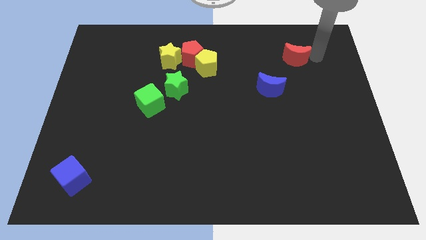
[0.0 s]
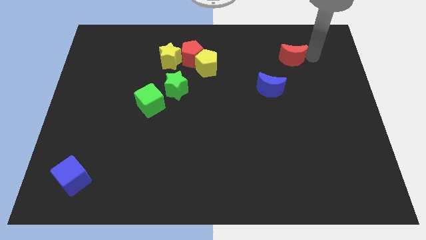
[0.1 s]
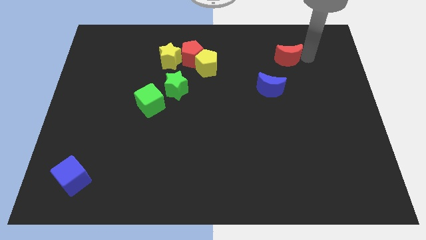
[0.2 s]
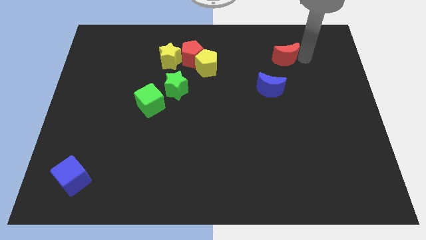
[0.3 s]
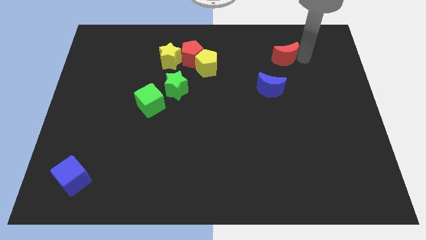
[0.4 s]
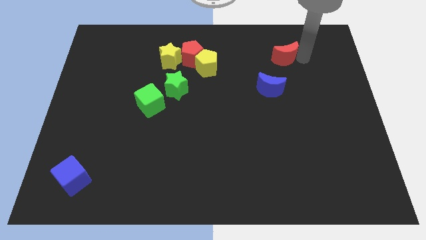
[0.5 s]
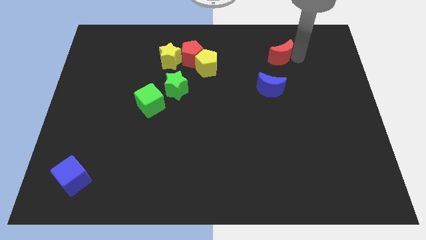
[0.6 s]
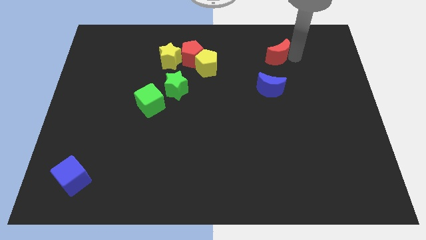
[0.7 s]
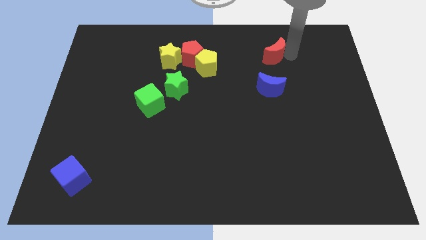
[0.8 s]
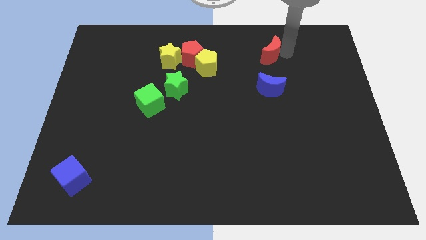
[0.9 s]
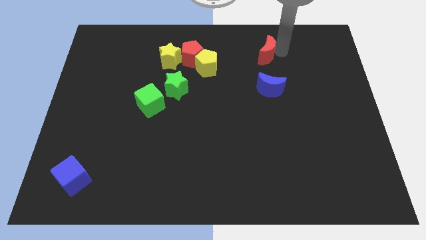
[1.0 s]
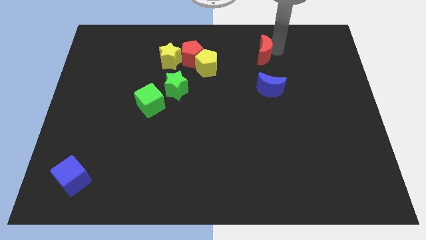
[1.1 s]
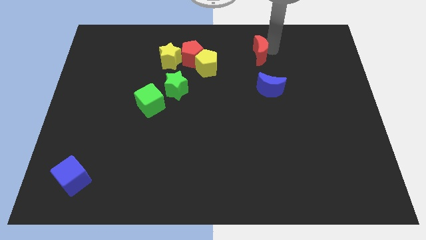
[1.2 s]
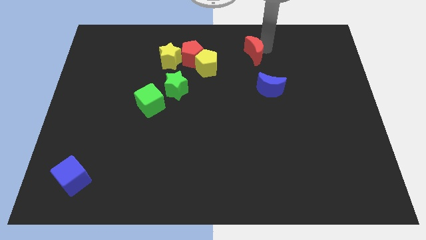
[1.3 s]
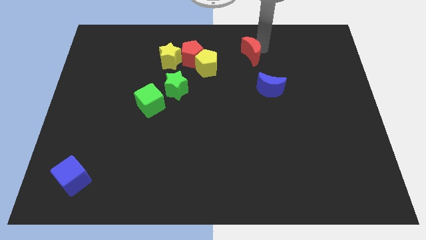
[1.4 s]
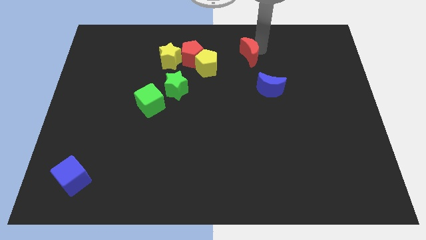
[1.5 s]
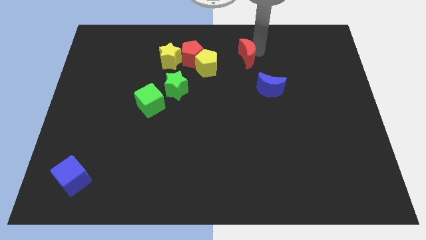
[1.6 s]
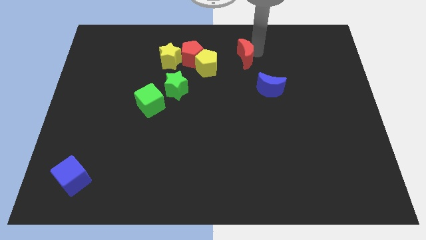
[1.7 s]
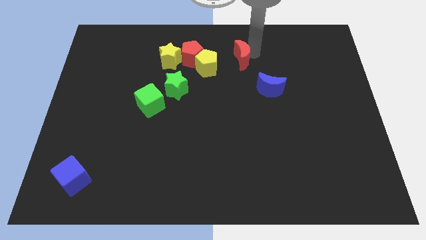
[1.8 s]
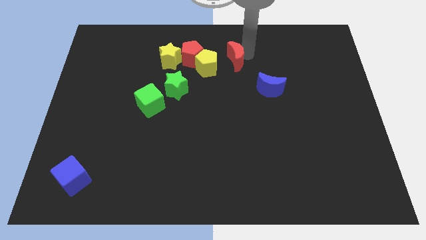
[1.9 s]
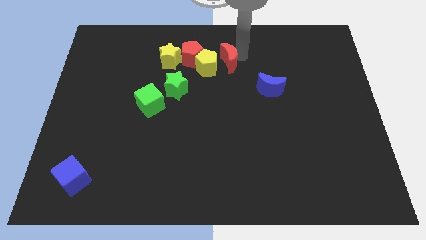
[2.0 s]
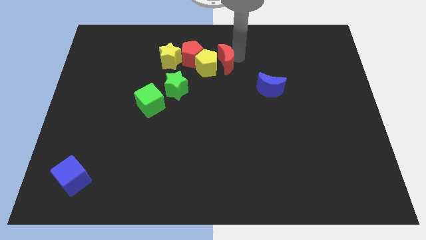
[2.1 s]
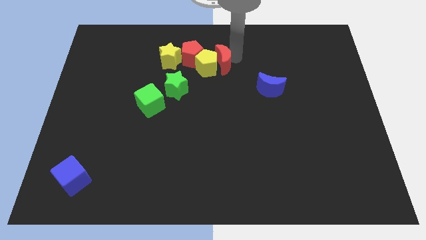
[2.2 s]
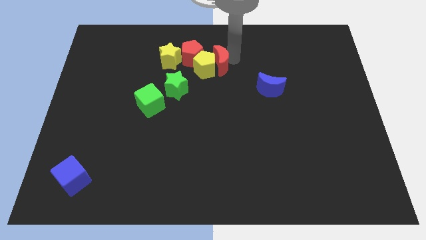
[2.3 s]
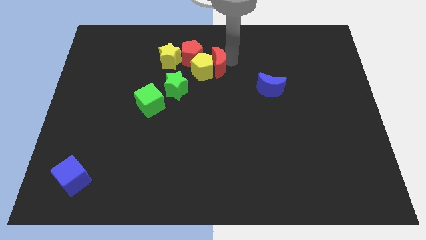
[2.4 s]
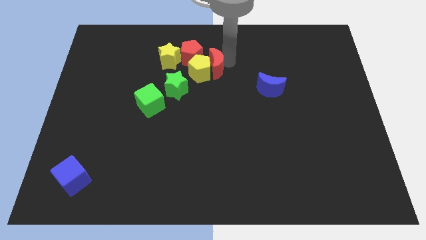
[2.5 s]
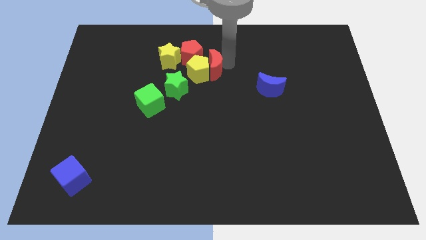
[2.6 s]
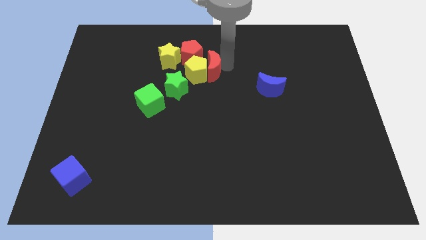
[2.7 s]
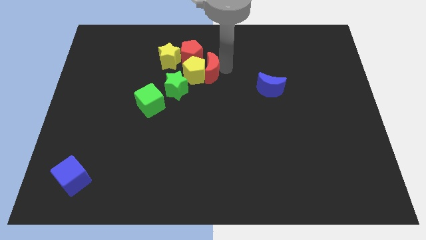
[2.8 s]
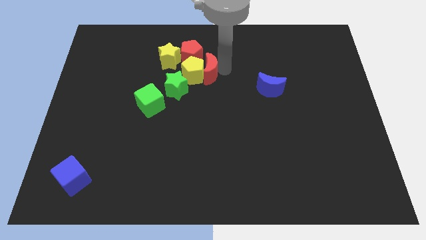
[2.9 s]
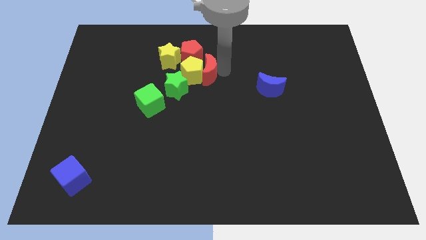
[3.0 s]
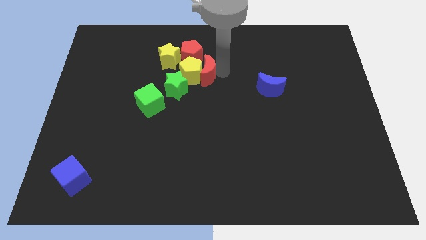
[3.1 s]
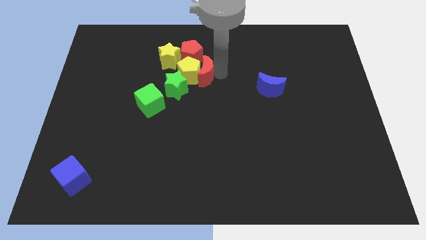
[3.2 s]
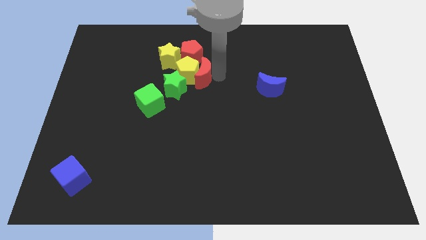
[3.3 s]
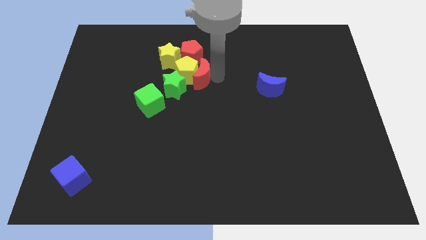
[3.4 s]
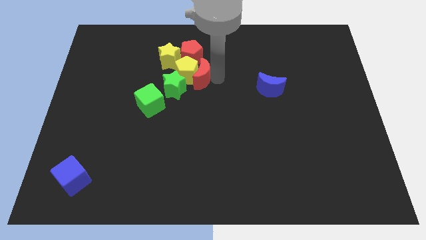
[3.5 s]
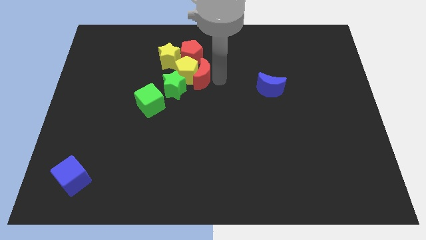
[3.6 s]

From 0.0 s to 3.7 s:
push the red crescent into the yellow pentagon

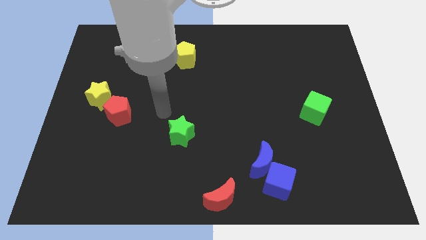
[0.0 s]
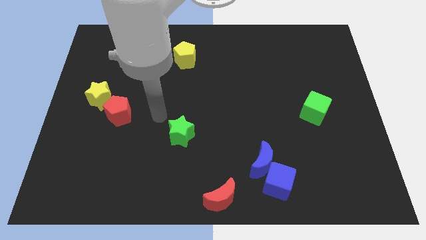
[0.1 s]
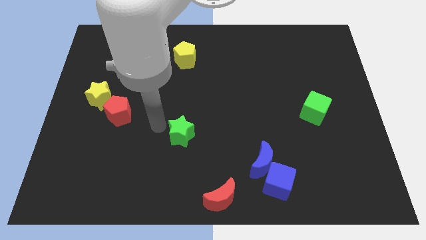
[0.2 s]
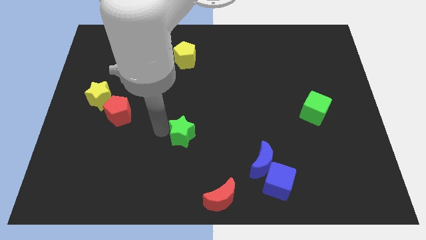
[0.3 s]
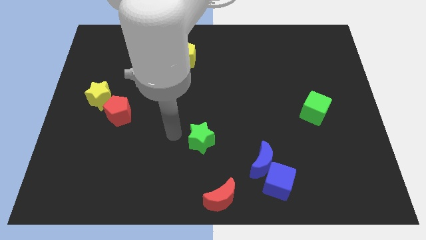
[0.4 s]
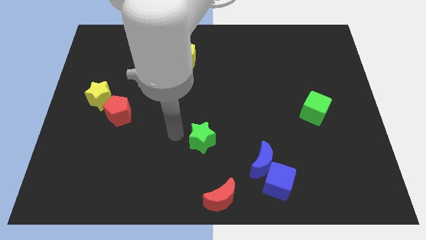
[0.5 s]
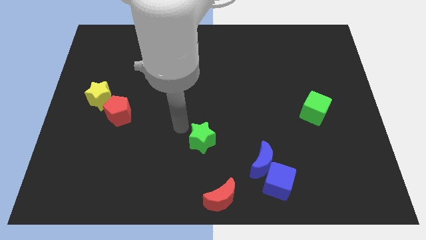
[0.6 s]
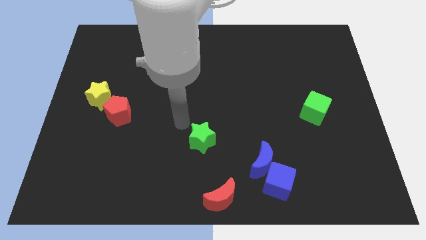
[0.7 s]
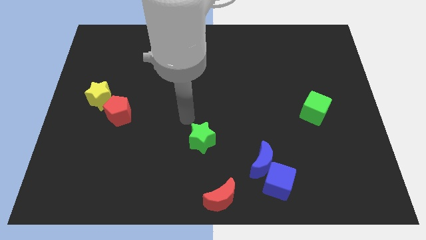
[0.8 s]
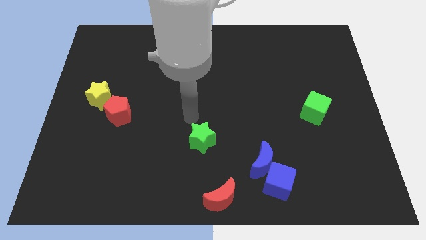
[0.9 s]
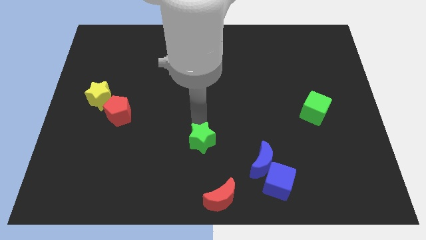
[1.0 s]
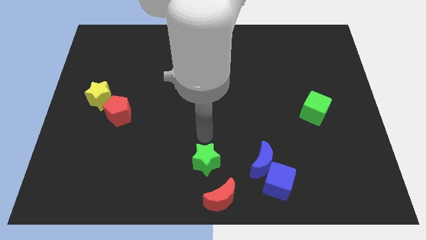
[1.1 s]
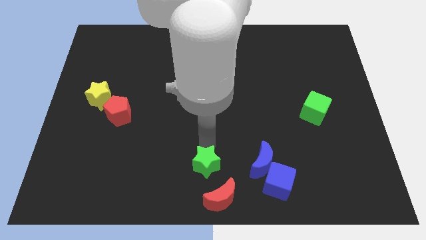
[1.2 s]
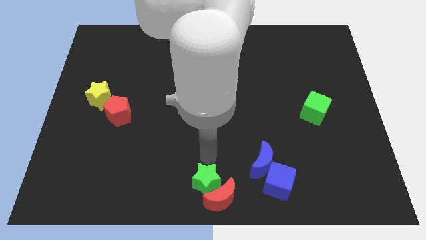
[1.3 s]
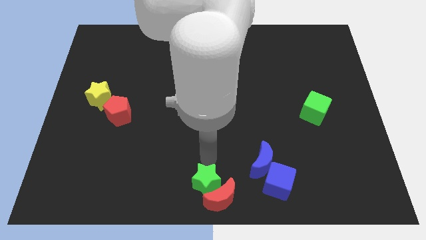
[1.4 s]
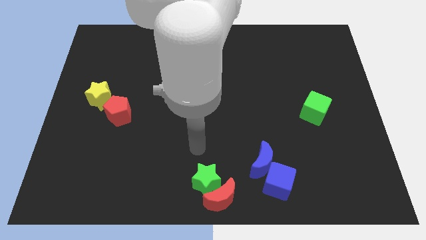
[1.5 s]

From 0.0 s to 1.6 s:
move the green star to the red crescent

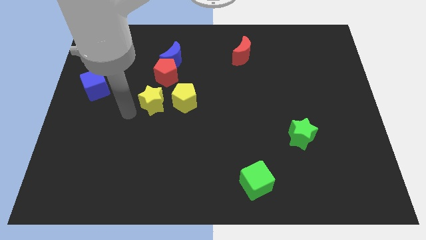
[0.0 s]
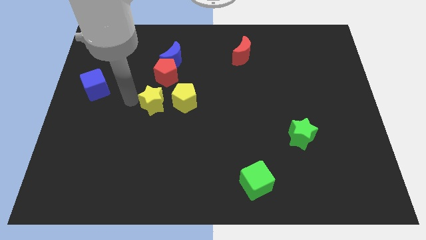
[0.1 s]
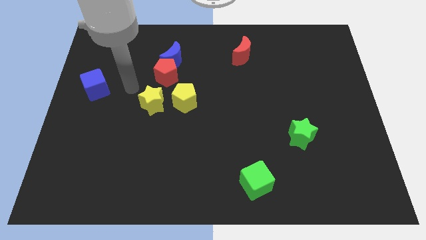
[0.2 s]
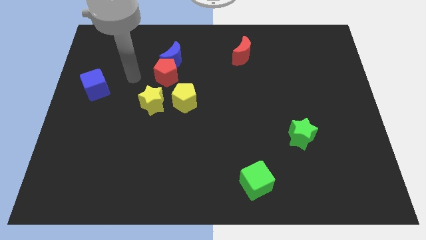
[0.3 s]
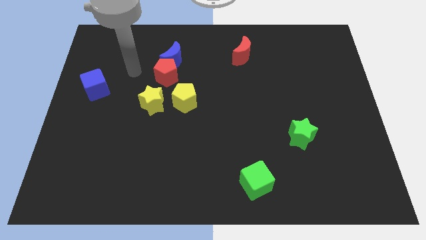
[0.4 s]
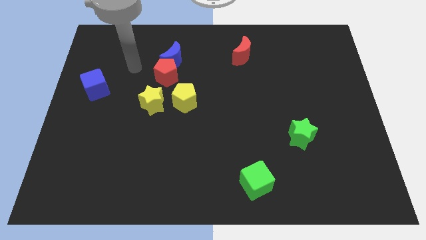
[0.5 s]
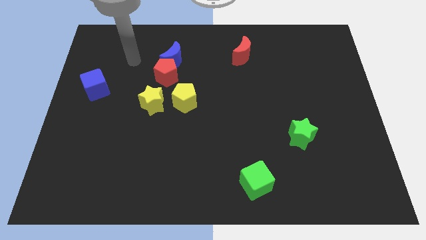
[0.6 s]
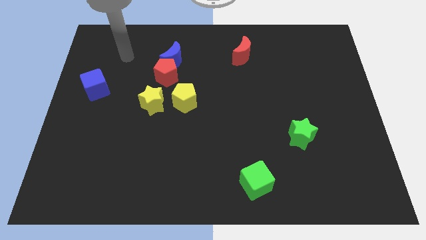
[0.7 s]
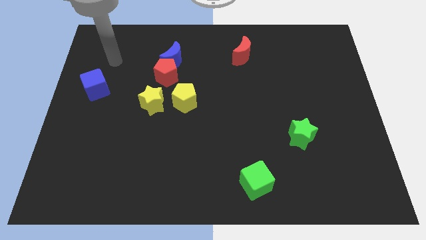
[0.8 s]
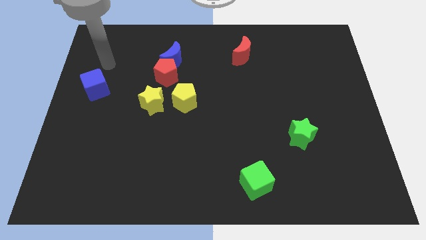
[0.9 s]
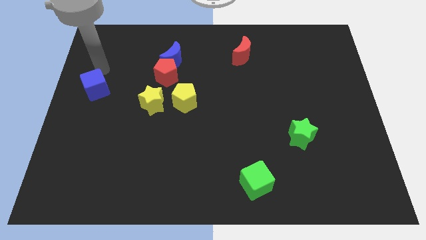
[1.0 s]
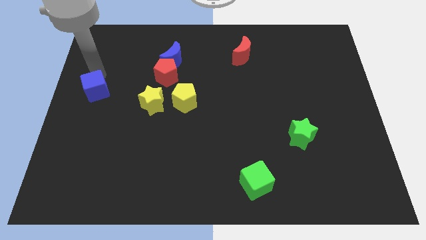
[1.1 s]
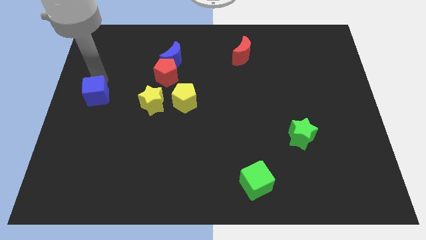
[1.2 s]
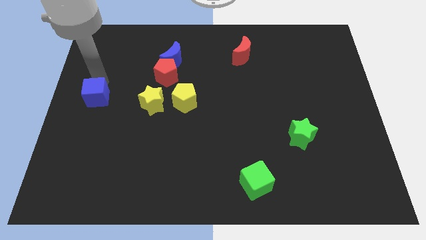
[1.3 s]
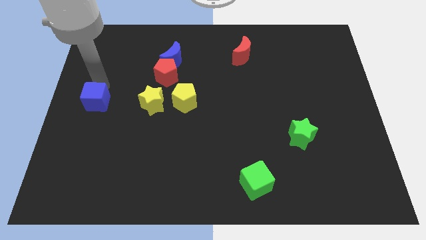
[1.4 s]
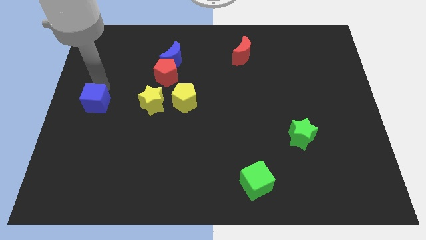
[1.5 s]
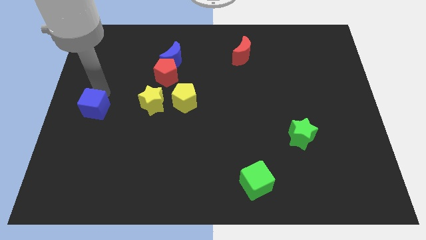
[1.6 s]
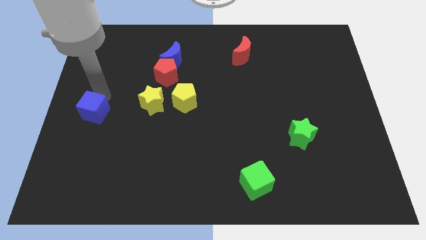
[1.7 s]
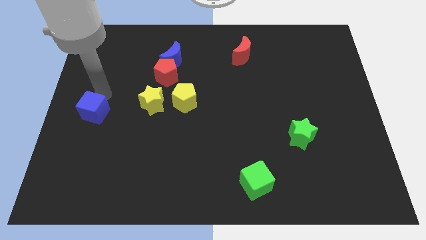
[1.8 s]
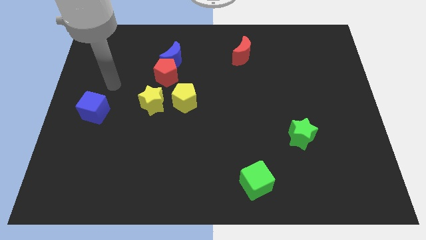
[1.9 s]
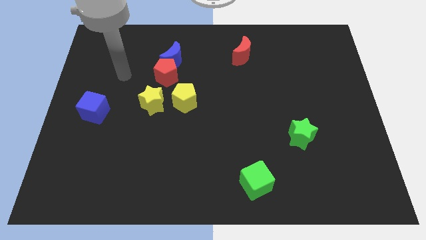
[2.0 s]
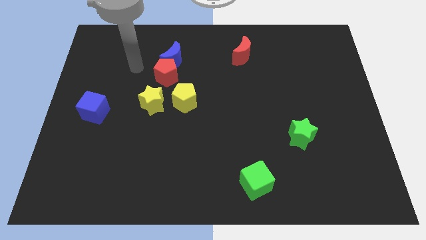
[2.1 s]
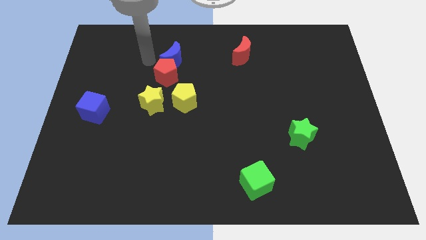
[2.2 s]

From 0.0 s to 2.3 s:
place the blue cube to the left of the yellow star

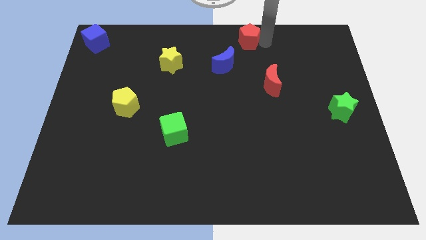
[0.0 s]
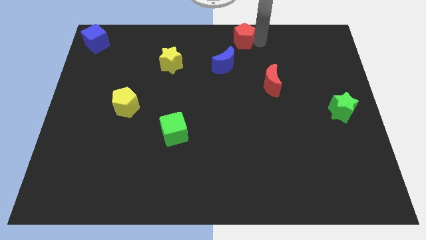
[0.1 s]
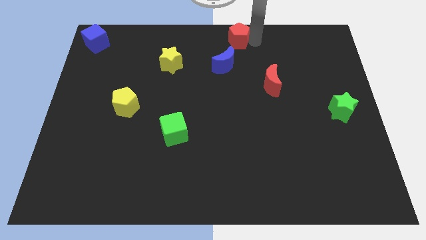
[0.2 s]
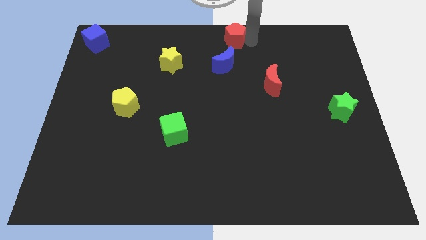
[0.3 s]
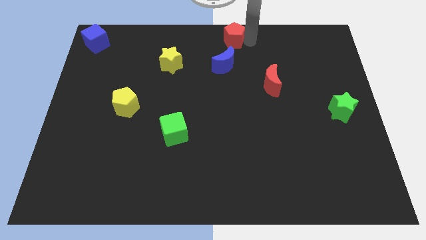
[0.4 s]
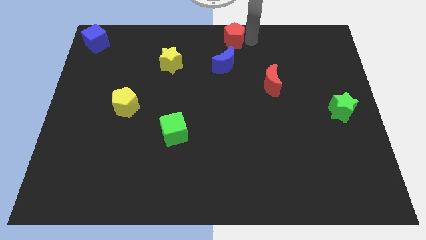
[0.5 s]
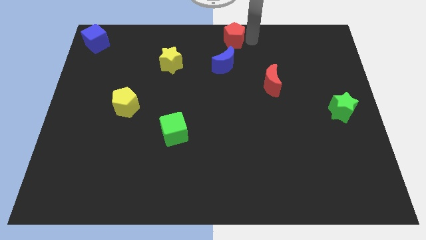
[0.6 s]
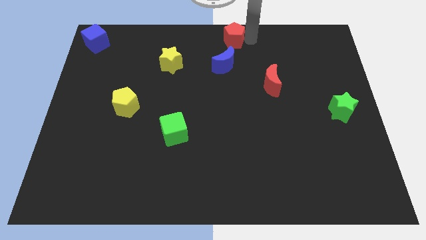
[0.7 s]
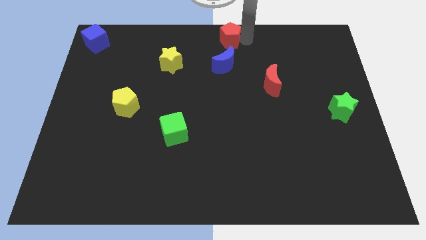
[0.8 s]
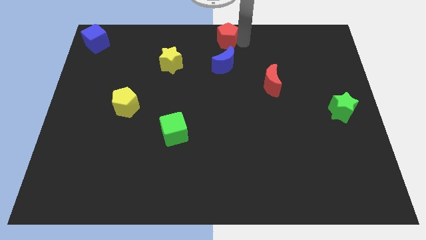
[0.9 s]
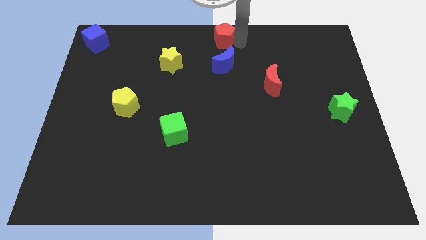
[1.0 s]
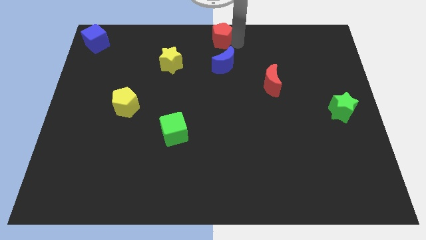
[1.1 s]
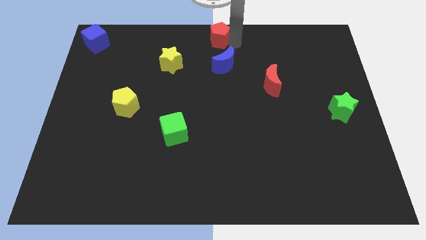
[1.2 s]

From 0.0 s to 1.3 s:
put the red pentagon above the blue moon

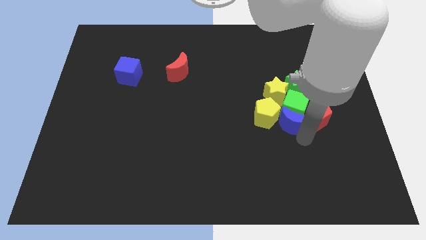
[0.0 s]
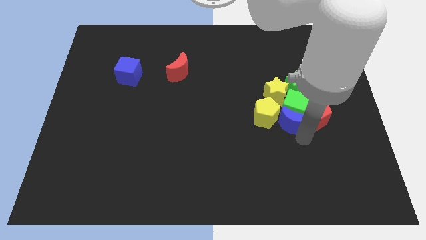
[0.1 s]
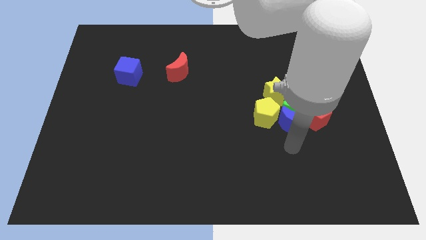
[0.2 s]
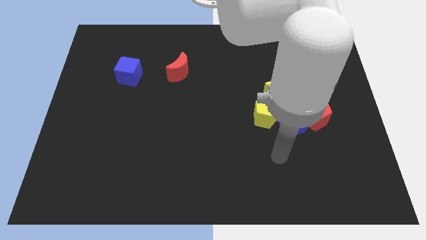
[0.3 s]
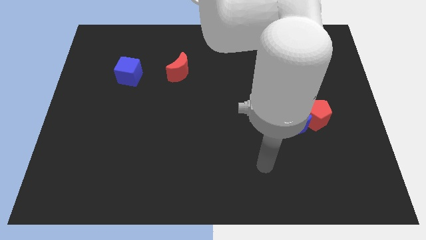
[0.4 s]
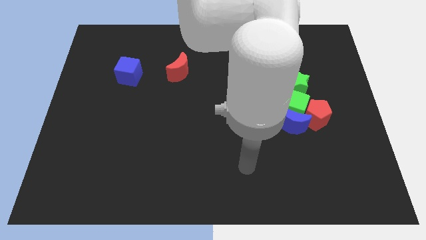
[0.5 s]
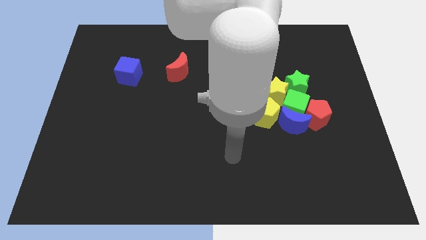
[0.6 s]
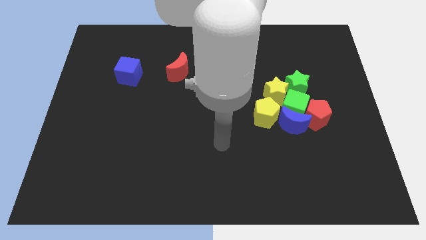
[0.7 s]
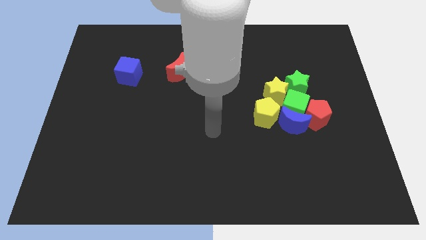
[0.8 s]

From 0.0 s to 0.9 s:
move the arm away from the group of blocks
